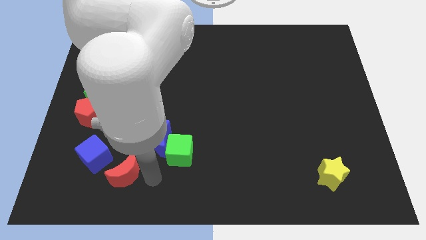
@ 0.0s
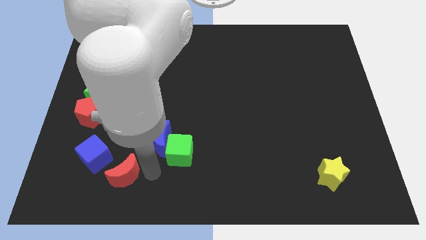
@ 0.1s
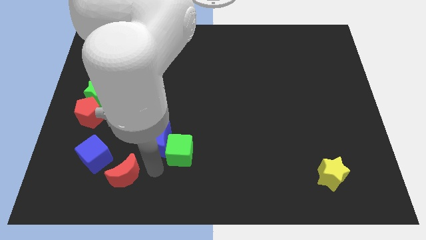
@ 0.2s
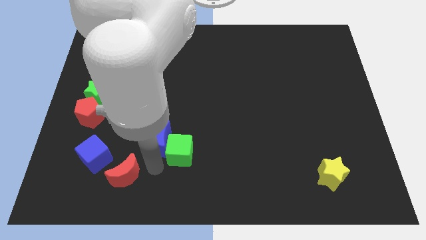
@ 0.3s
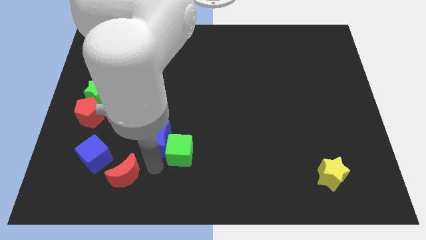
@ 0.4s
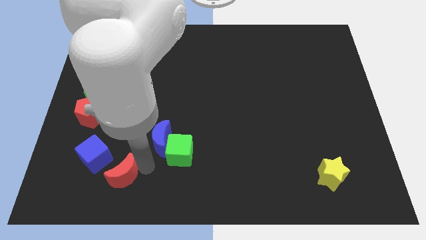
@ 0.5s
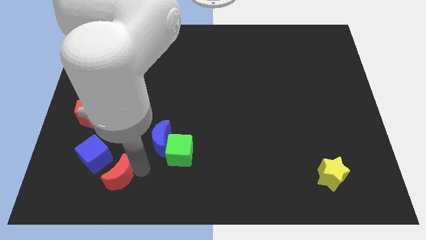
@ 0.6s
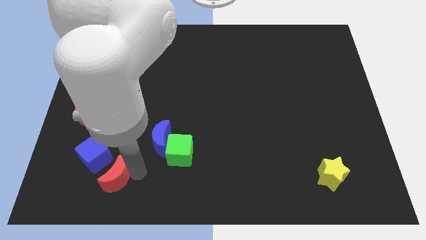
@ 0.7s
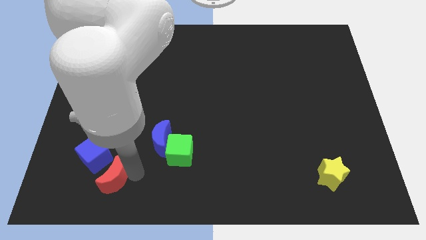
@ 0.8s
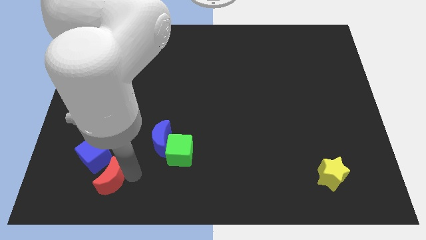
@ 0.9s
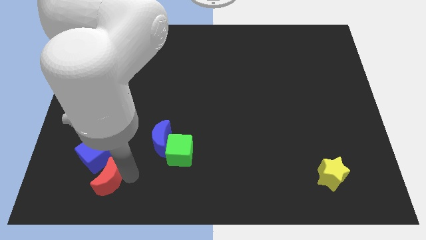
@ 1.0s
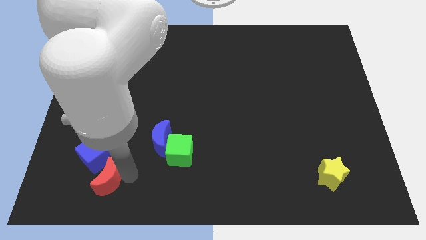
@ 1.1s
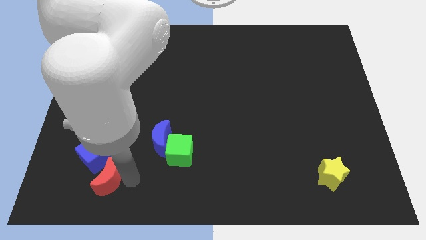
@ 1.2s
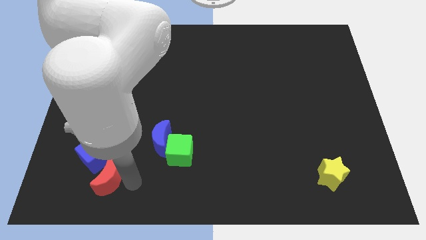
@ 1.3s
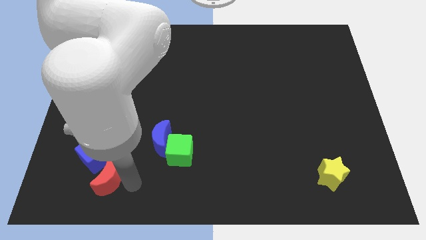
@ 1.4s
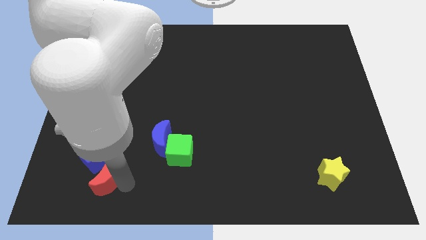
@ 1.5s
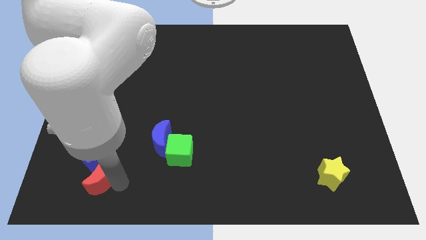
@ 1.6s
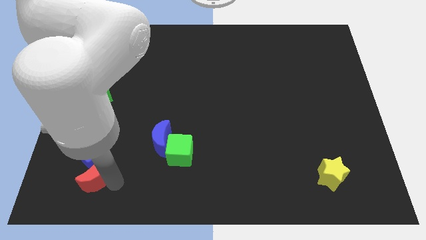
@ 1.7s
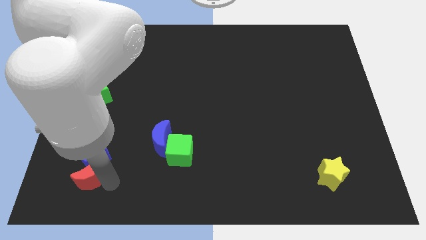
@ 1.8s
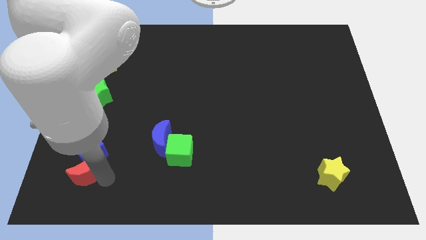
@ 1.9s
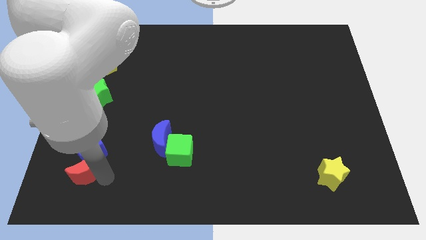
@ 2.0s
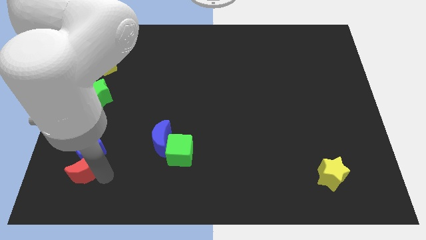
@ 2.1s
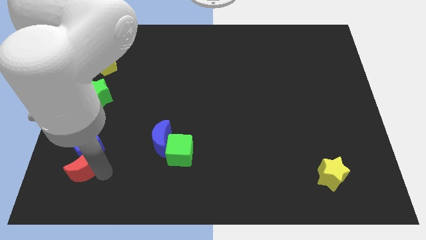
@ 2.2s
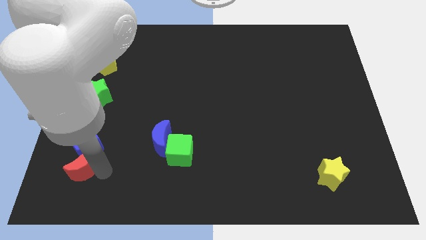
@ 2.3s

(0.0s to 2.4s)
put the red moon below the blue cube

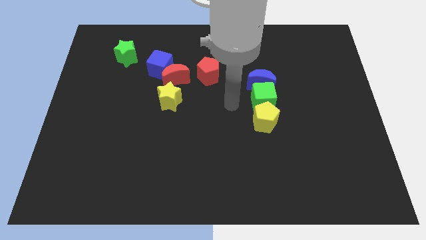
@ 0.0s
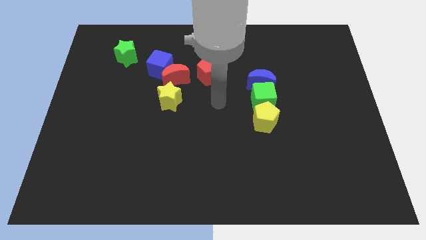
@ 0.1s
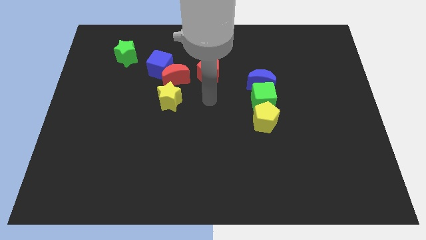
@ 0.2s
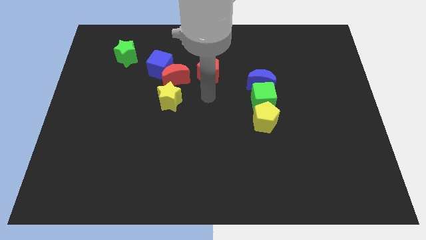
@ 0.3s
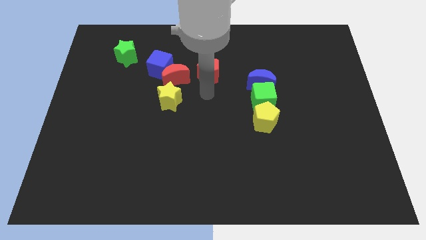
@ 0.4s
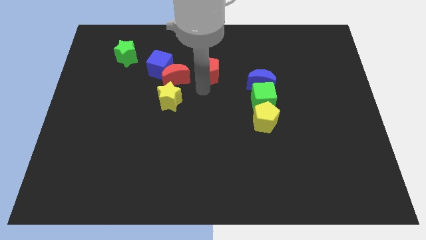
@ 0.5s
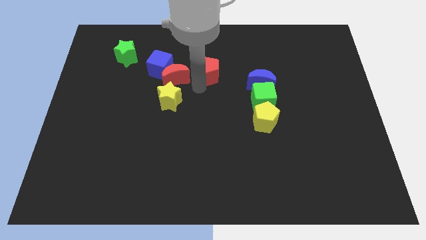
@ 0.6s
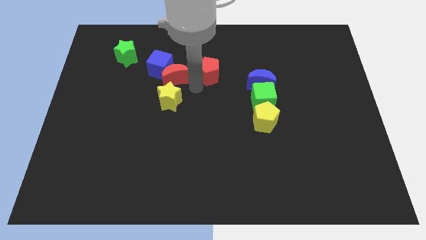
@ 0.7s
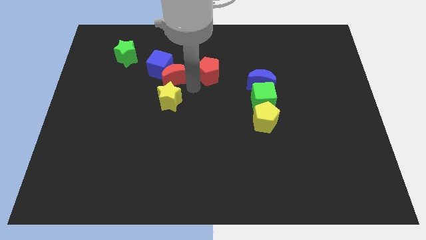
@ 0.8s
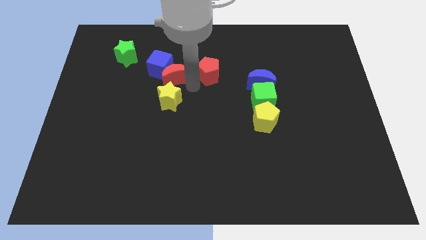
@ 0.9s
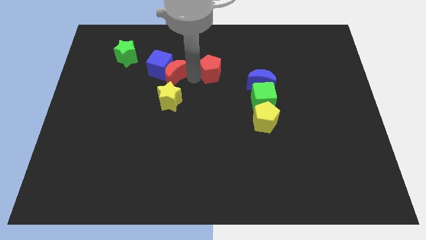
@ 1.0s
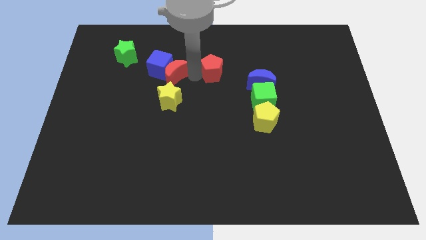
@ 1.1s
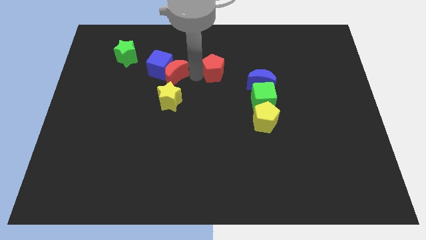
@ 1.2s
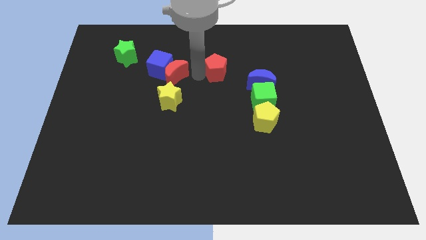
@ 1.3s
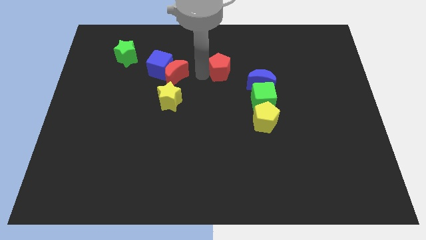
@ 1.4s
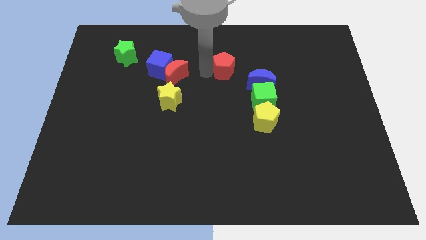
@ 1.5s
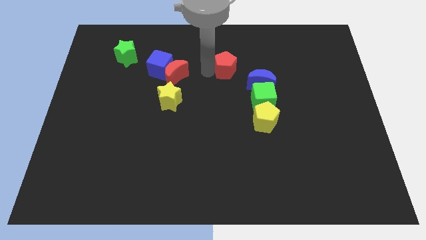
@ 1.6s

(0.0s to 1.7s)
slide the red pentagon slightly to the right side of the board

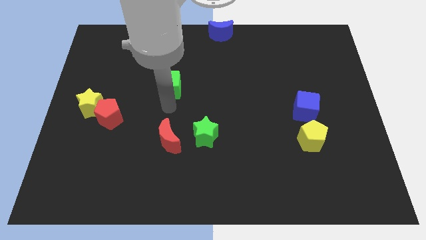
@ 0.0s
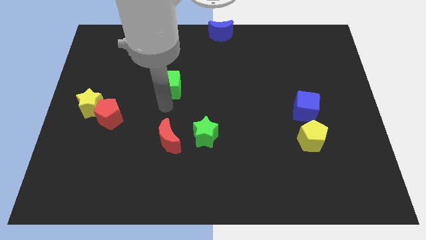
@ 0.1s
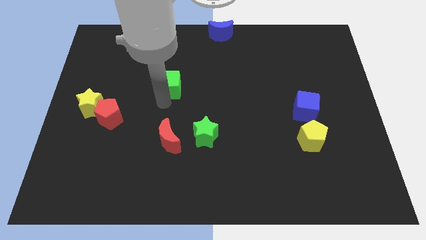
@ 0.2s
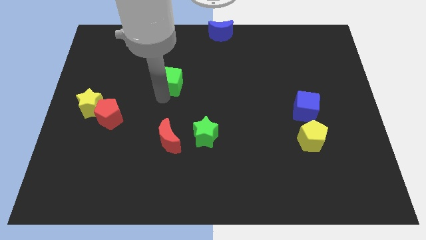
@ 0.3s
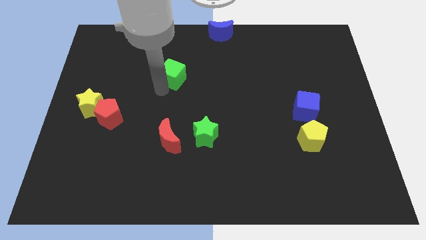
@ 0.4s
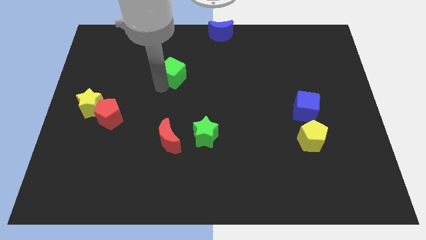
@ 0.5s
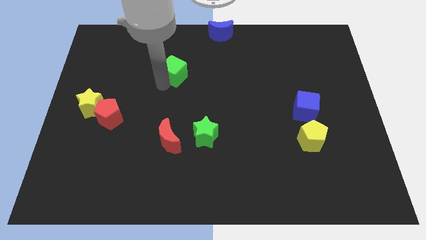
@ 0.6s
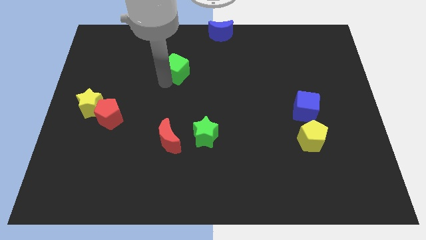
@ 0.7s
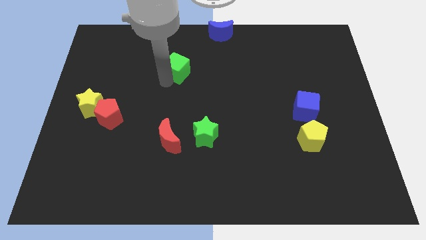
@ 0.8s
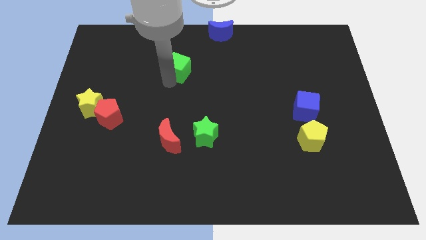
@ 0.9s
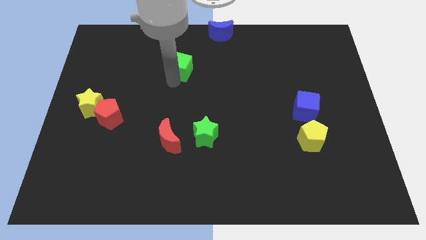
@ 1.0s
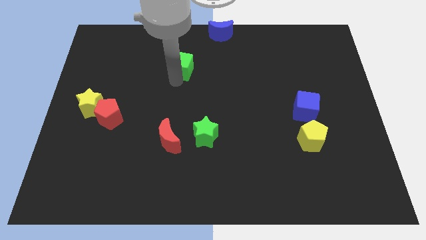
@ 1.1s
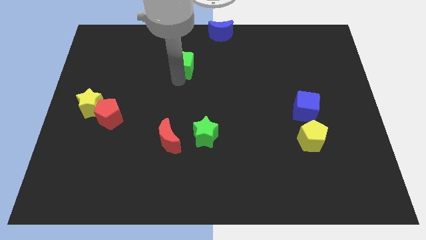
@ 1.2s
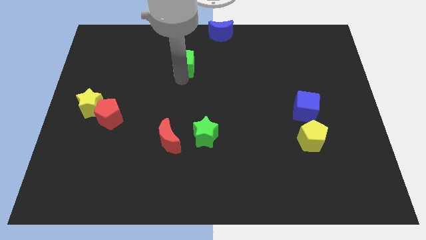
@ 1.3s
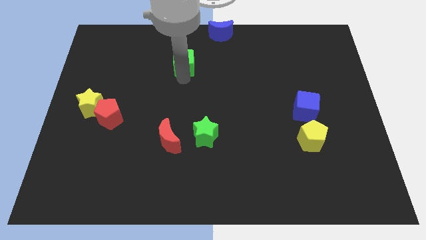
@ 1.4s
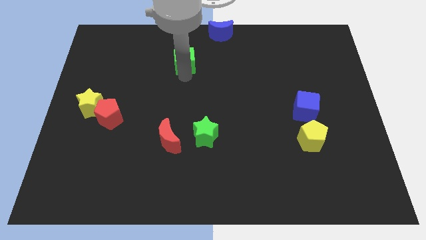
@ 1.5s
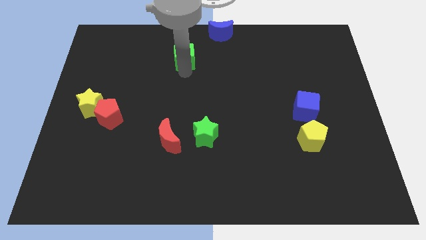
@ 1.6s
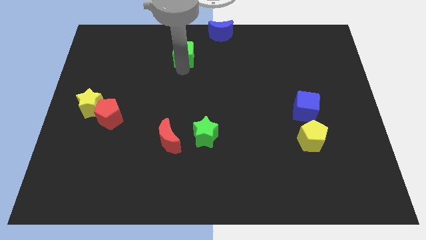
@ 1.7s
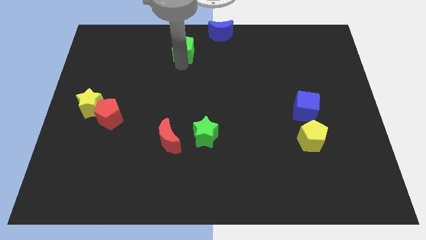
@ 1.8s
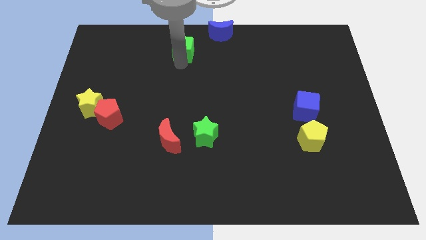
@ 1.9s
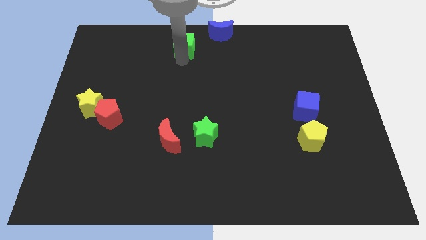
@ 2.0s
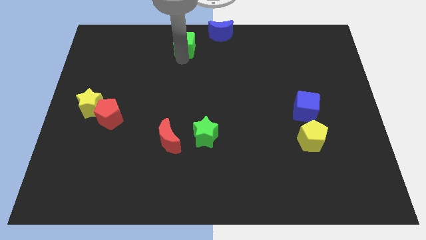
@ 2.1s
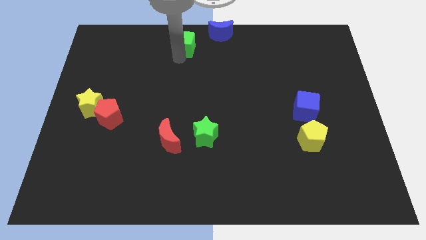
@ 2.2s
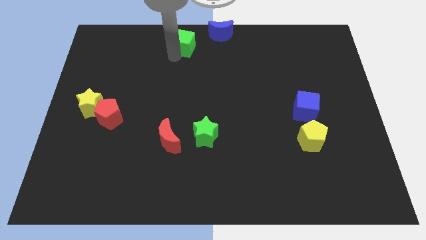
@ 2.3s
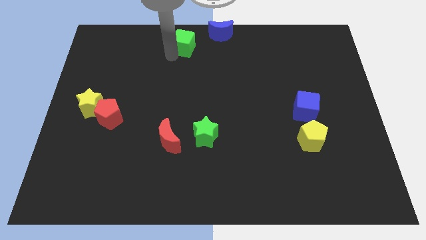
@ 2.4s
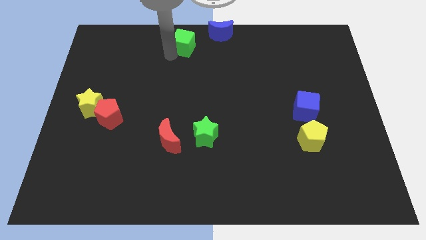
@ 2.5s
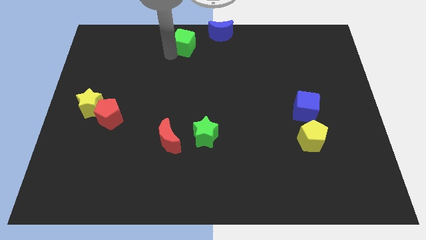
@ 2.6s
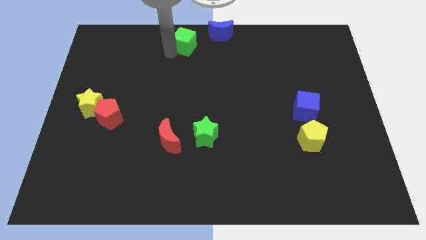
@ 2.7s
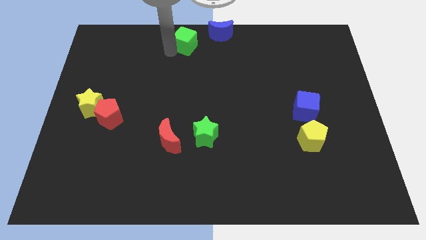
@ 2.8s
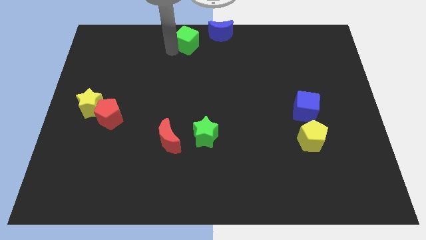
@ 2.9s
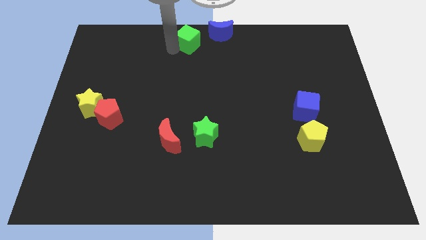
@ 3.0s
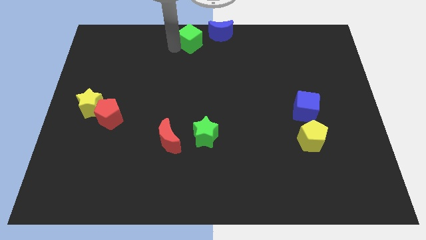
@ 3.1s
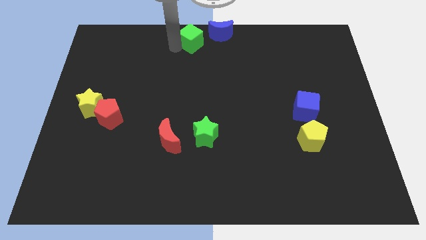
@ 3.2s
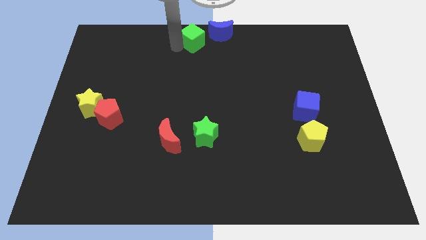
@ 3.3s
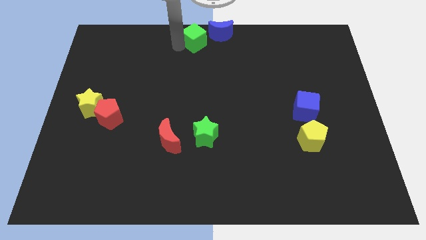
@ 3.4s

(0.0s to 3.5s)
move the green cube to the bottom left of the blue crescent

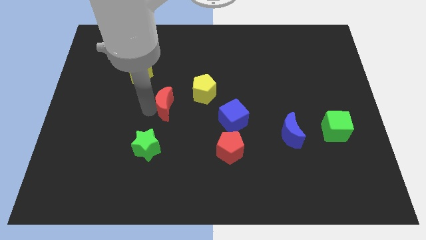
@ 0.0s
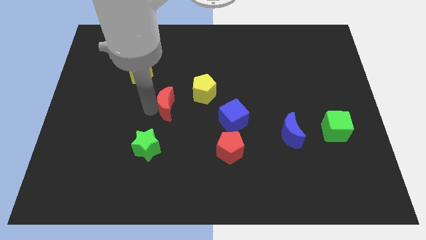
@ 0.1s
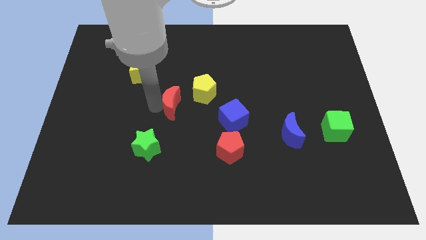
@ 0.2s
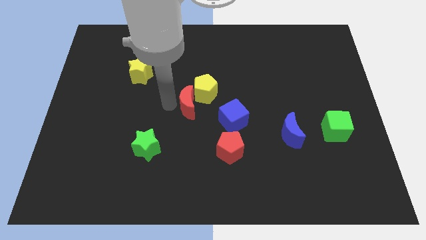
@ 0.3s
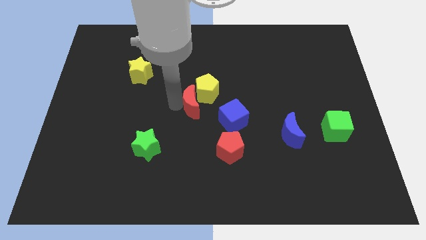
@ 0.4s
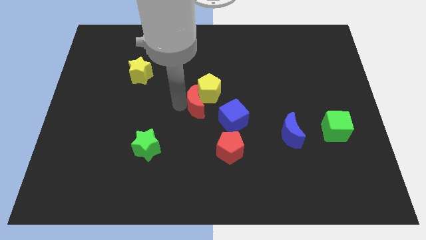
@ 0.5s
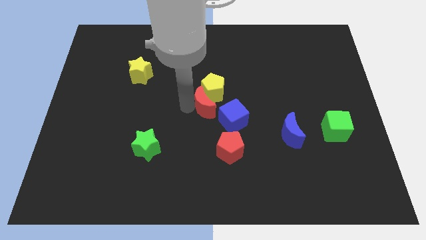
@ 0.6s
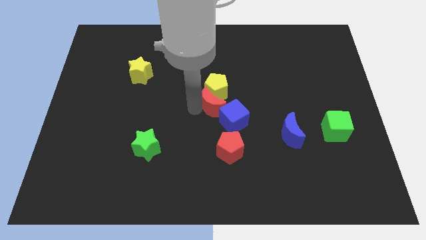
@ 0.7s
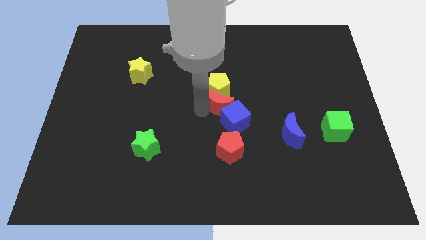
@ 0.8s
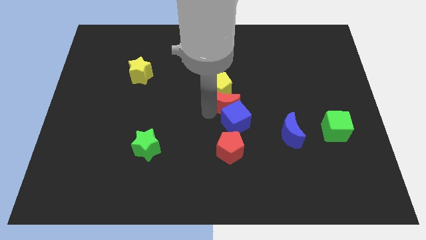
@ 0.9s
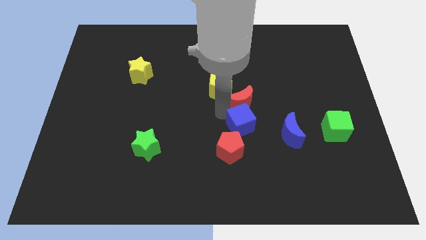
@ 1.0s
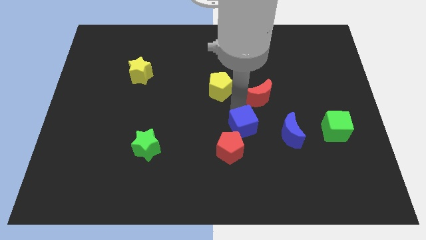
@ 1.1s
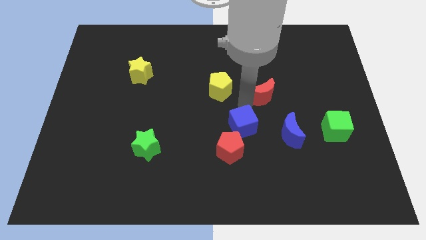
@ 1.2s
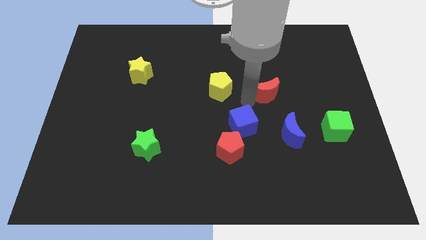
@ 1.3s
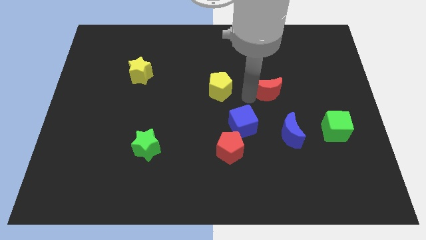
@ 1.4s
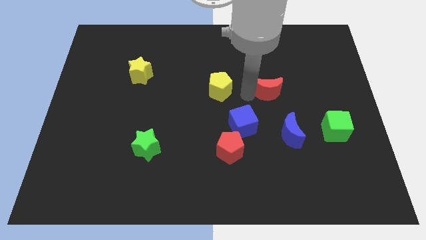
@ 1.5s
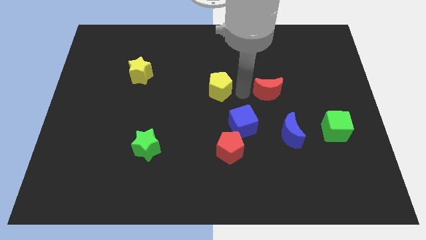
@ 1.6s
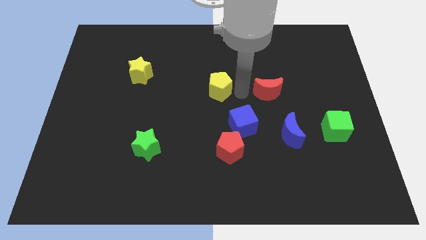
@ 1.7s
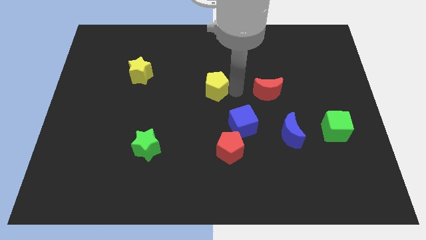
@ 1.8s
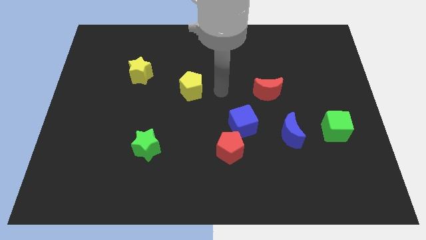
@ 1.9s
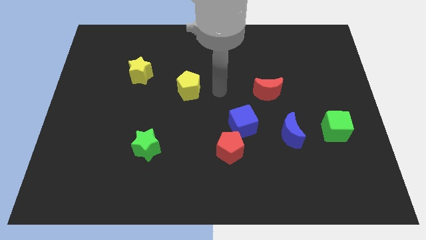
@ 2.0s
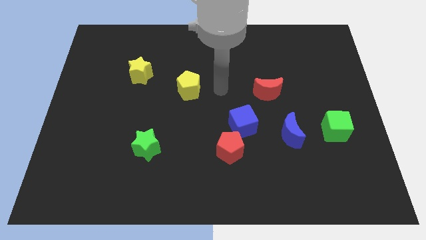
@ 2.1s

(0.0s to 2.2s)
place the yellow pentagon diagonal to the yellow star
